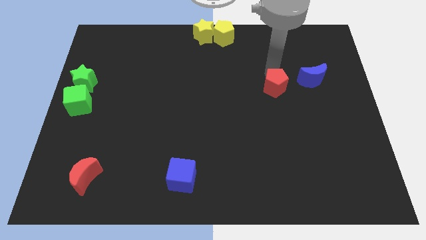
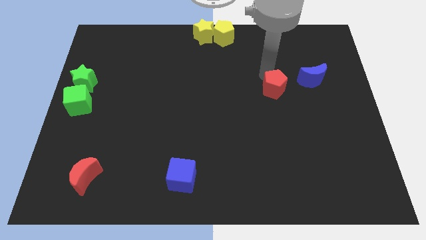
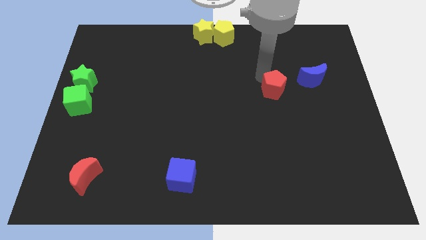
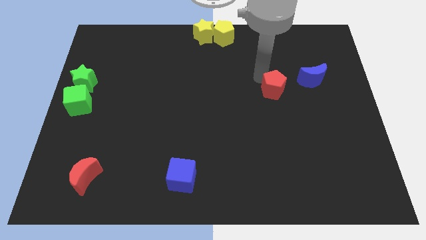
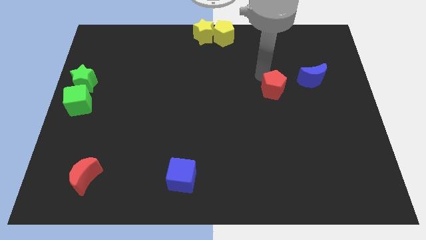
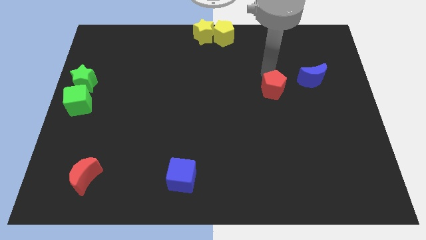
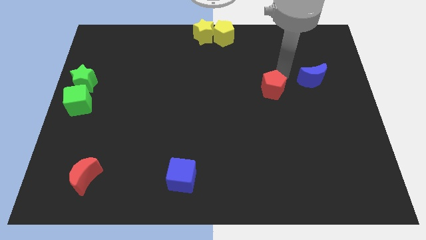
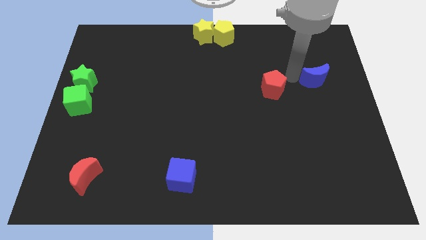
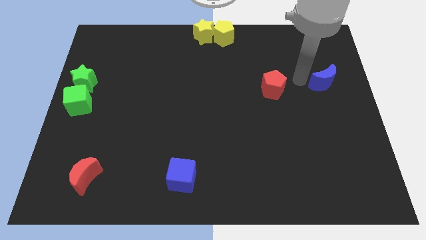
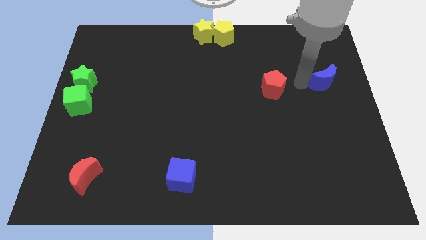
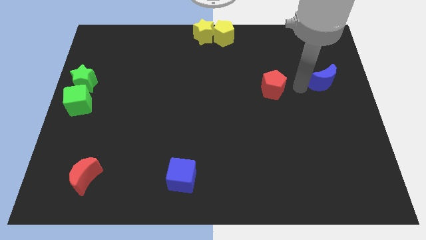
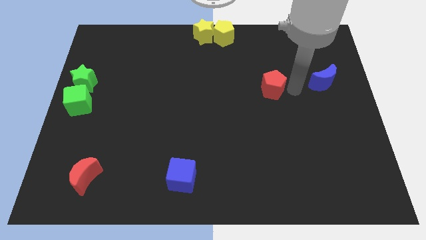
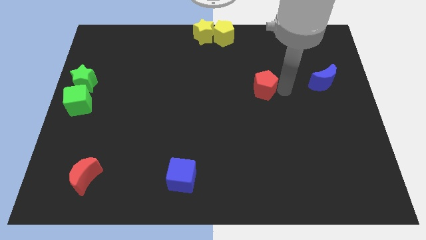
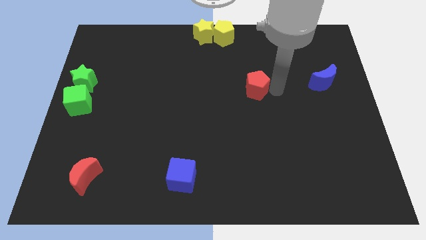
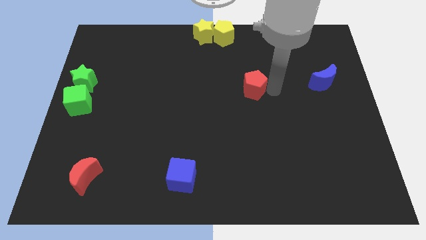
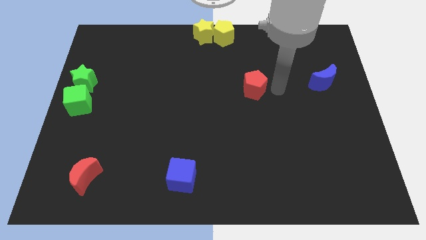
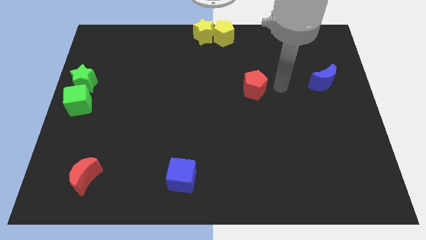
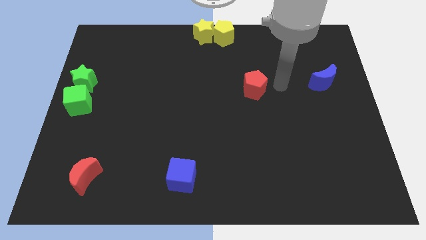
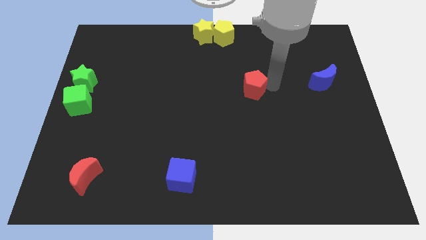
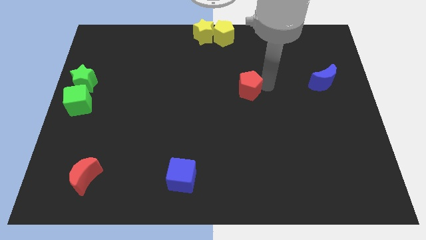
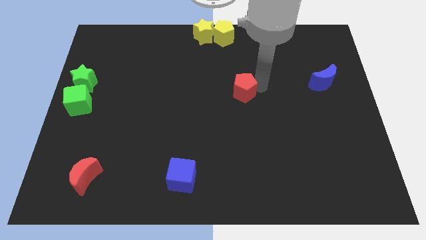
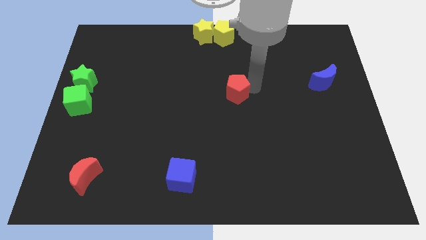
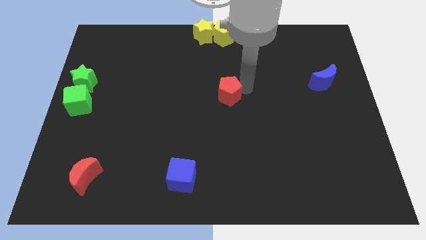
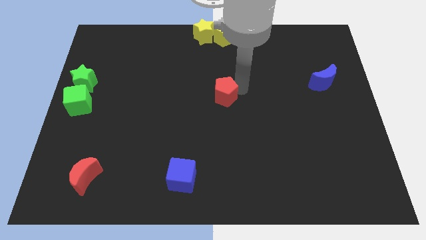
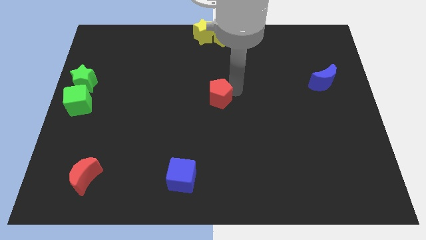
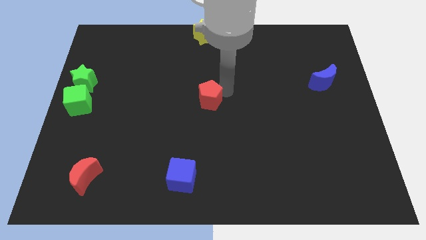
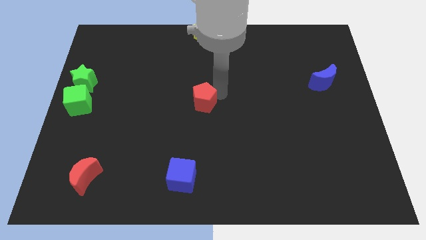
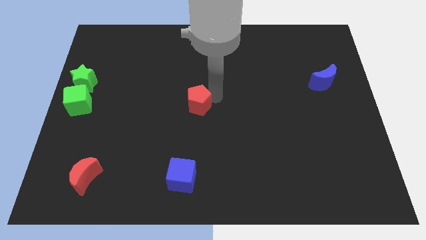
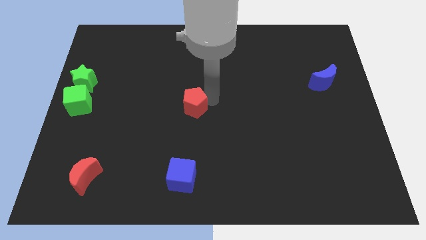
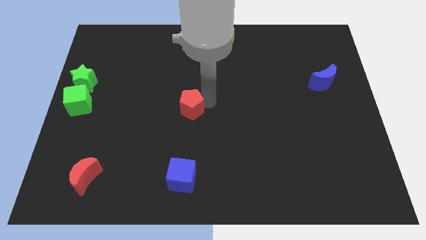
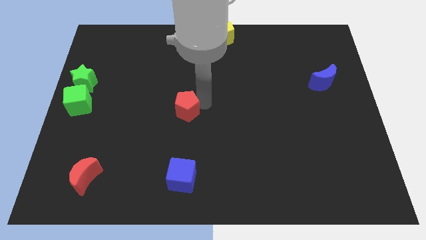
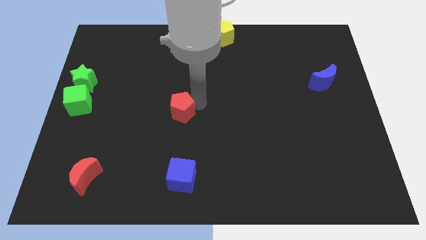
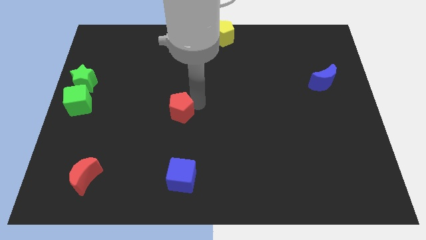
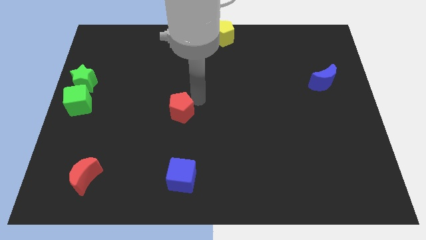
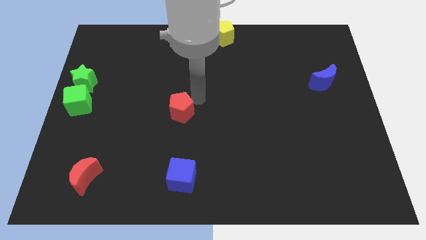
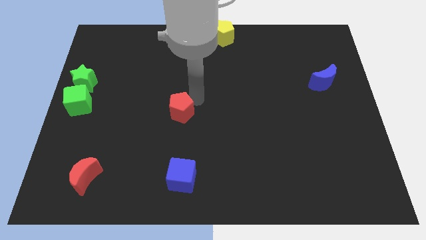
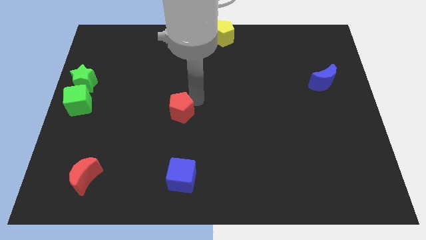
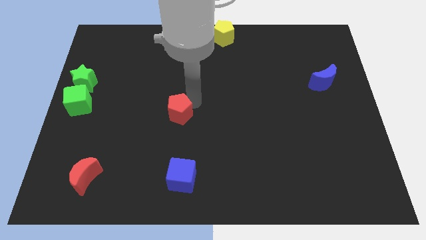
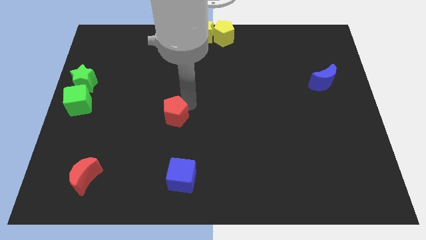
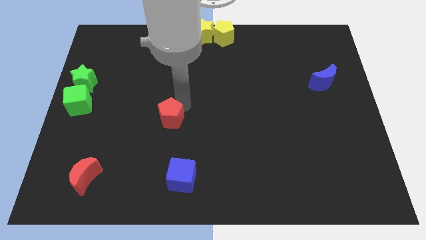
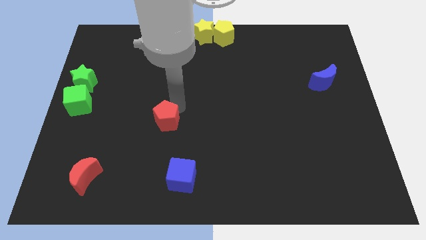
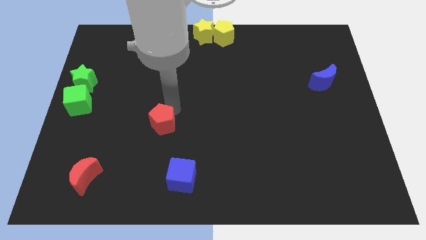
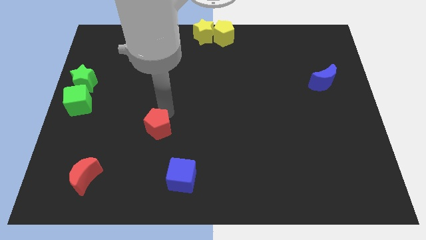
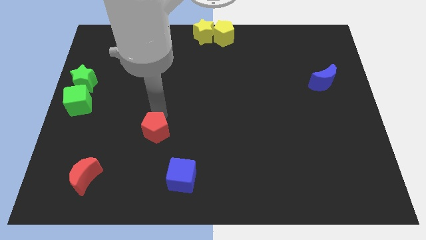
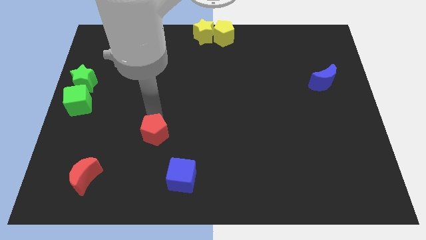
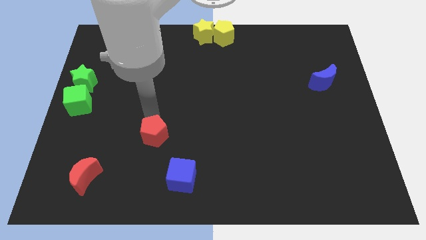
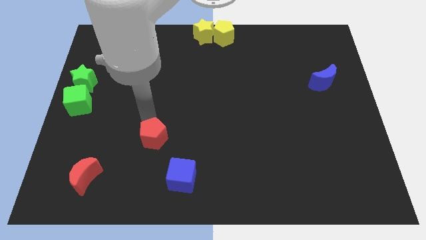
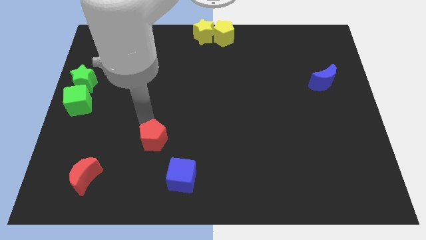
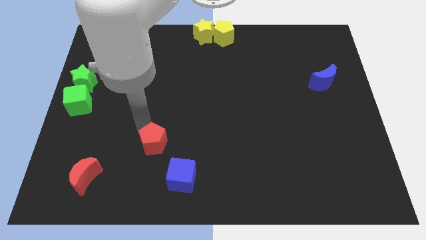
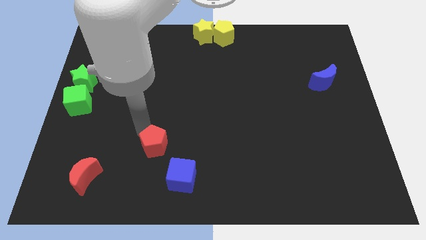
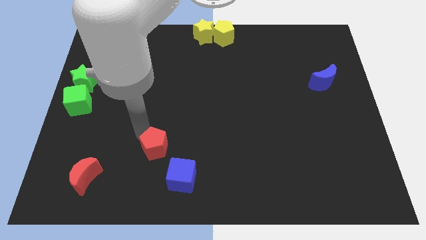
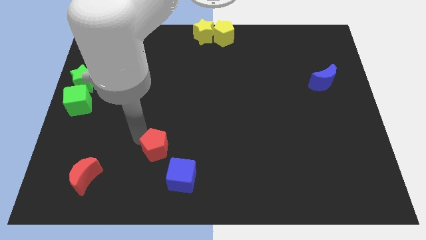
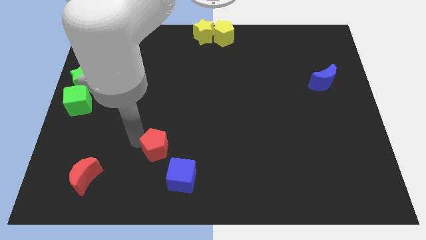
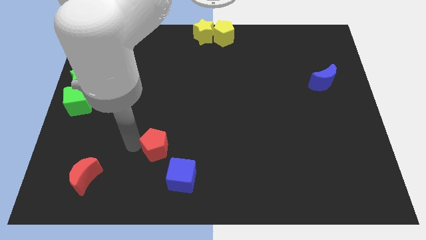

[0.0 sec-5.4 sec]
move the red pentagon to the top left of blue cube

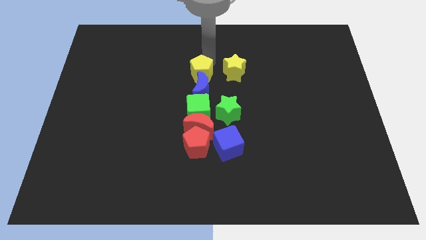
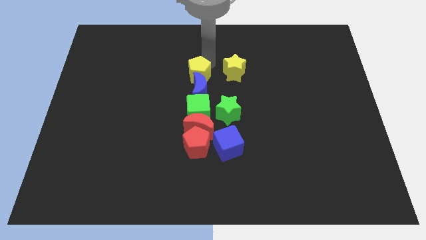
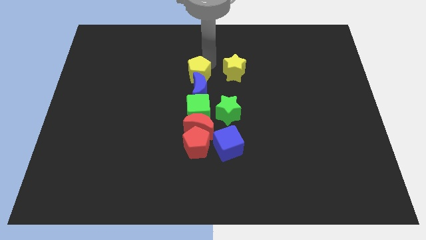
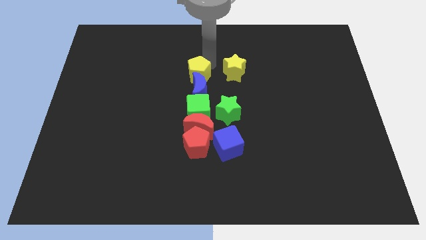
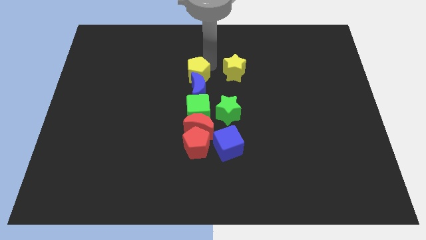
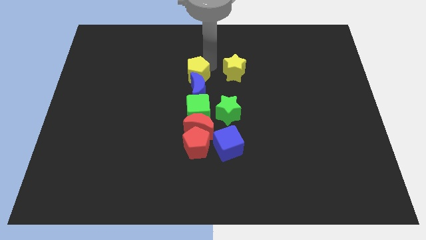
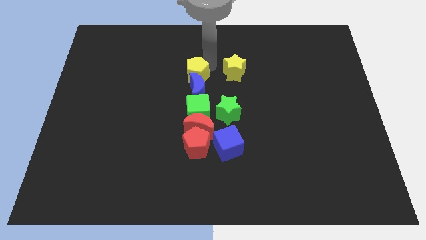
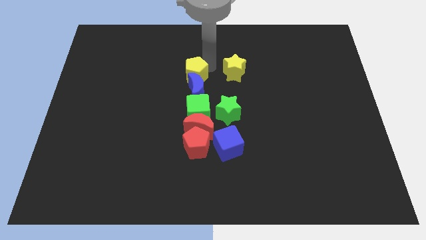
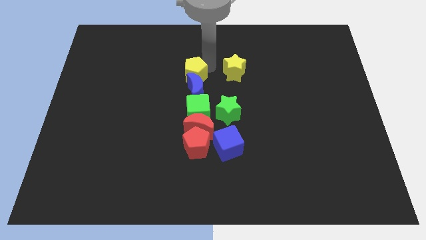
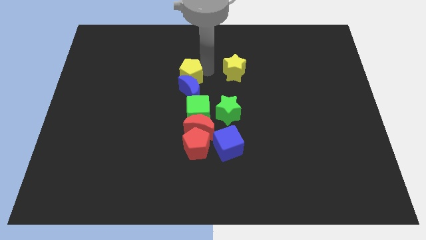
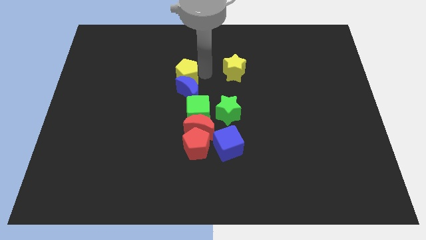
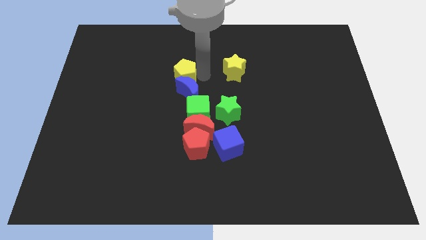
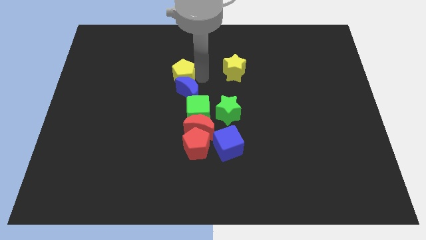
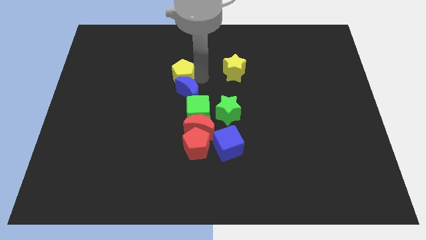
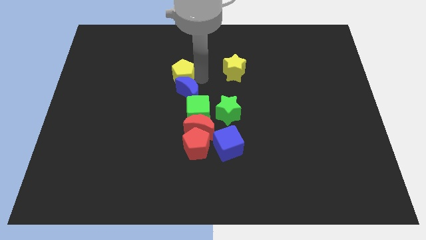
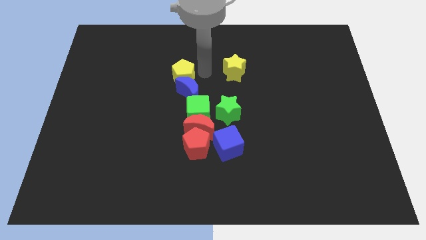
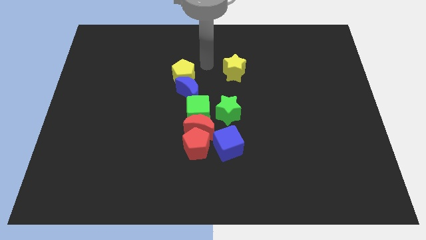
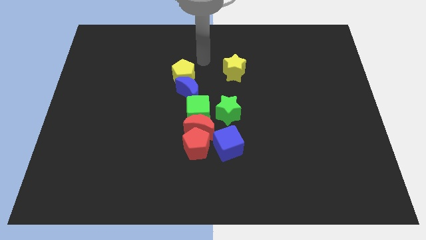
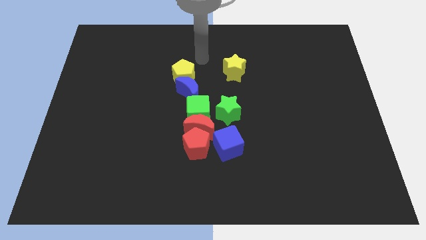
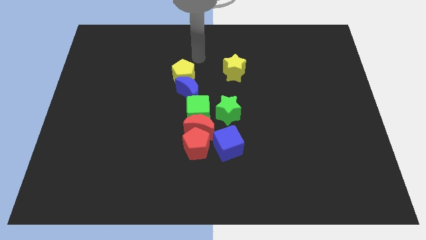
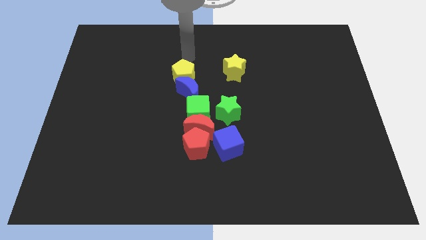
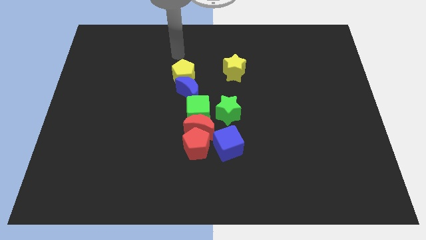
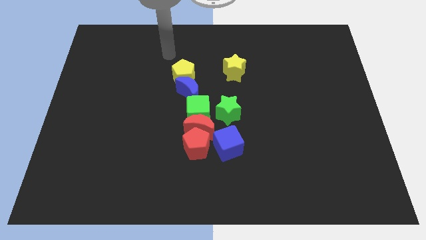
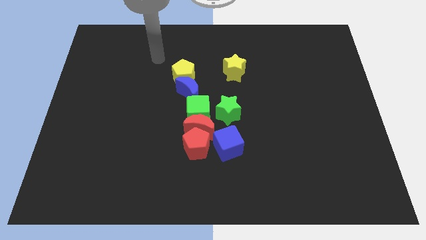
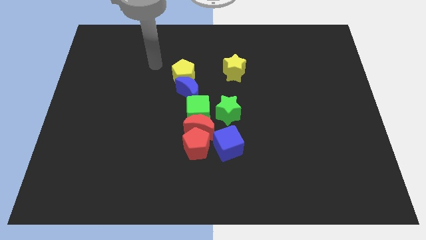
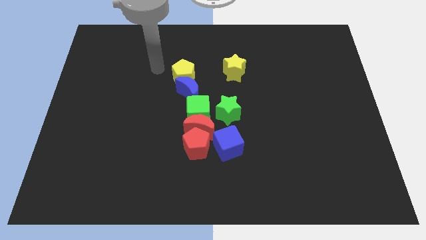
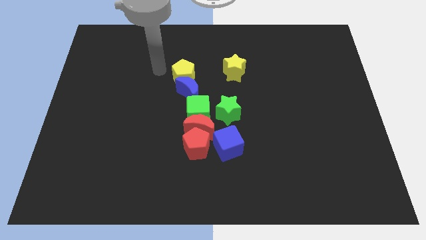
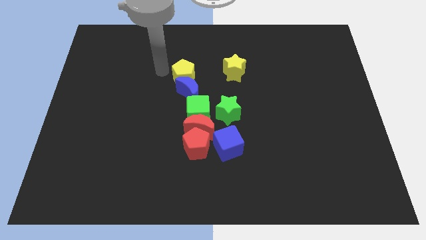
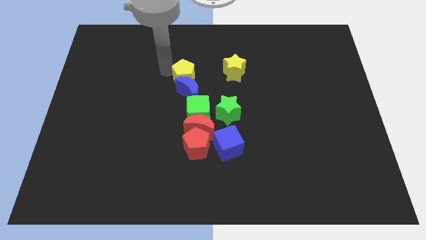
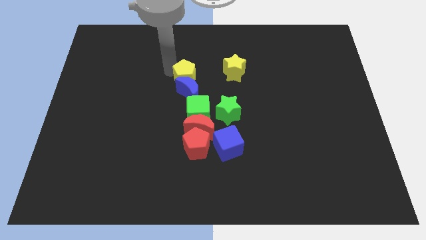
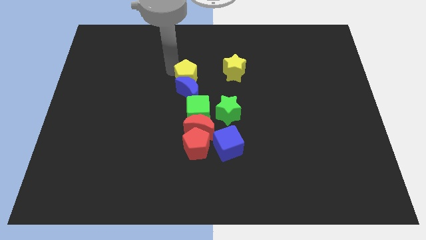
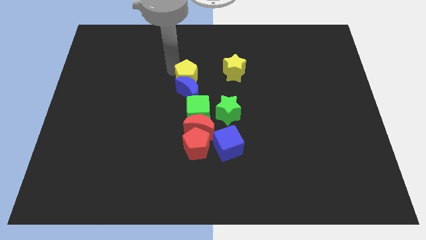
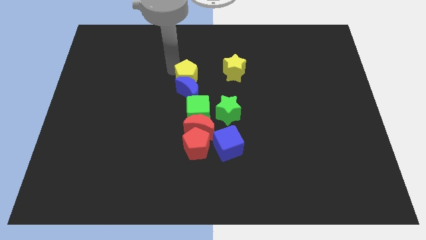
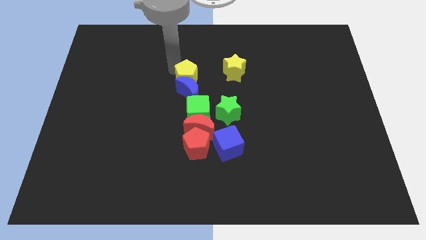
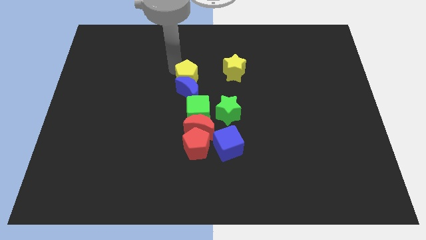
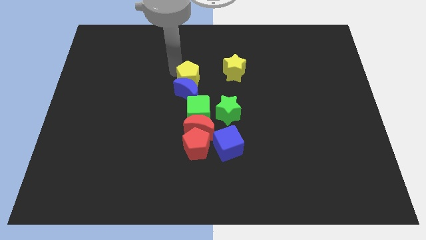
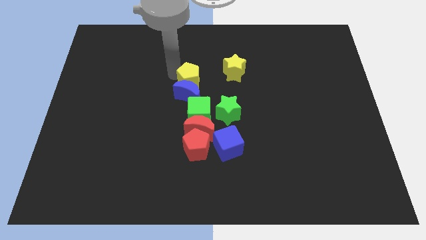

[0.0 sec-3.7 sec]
slightly move the yellow pentagon towards the left side of the board
